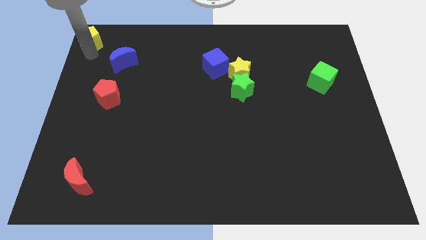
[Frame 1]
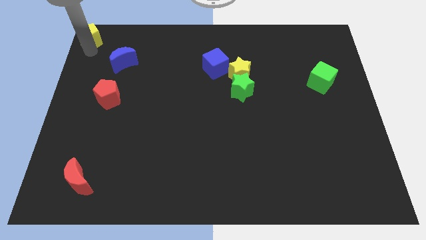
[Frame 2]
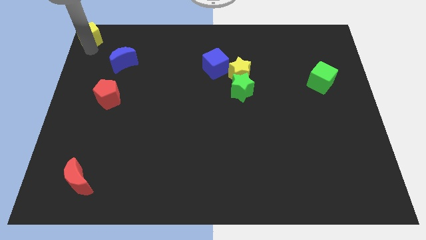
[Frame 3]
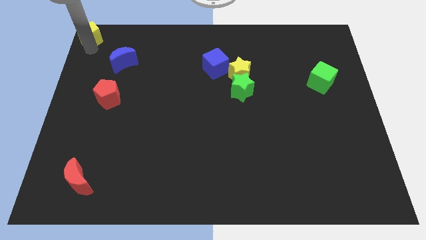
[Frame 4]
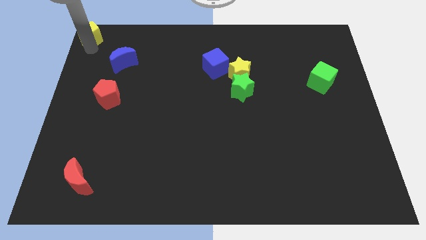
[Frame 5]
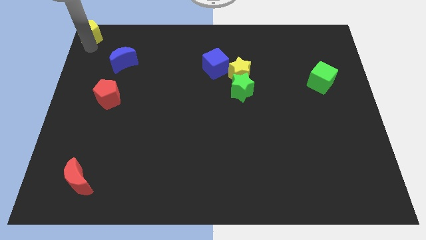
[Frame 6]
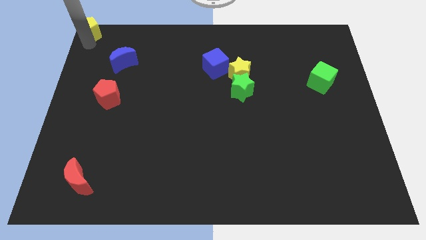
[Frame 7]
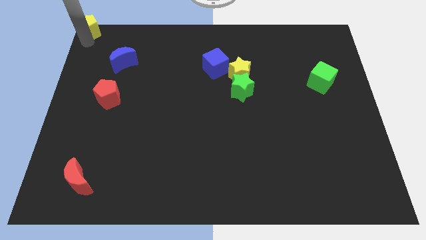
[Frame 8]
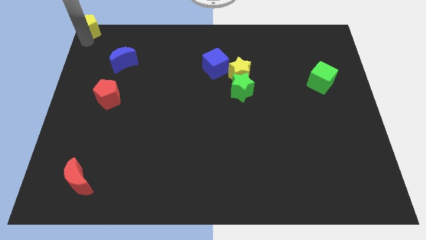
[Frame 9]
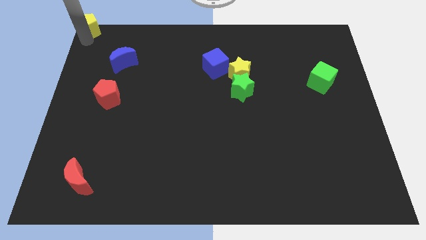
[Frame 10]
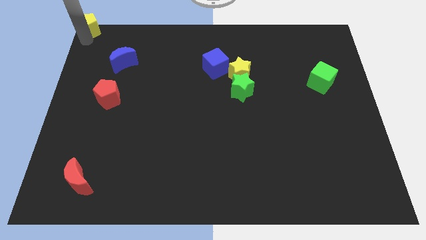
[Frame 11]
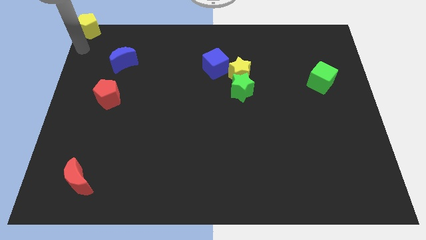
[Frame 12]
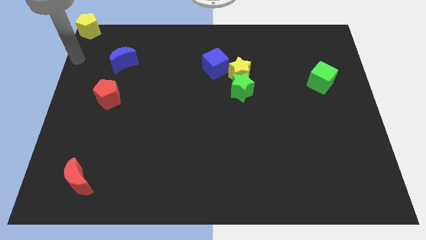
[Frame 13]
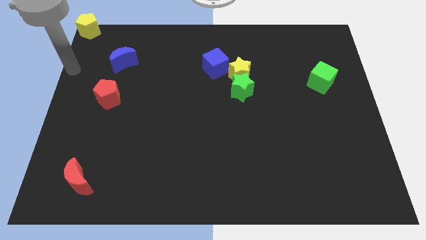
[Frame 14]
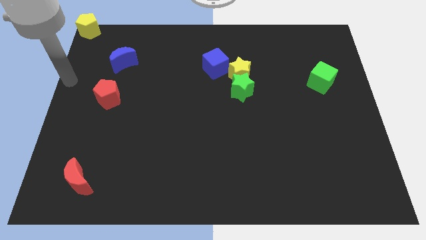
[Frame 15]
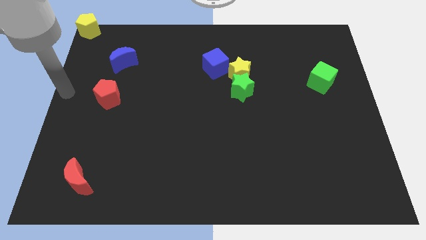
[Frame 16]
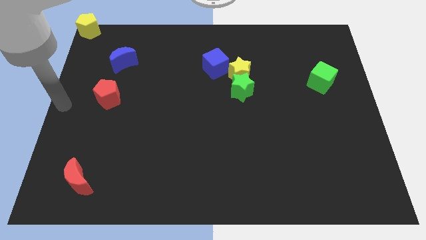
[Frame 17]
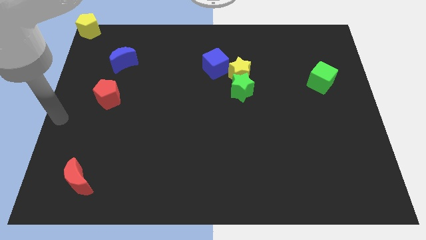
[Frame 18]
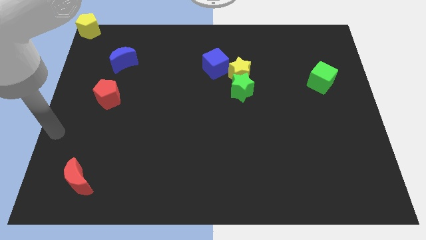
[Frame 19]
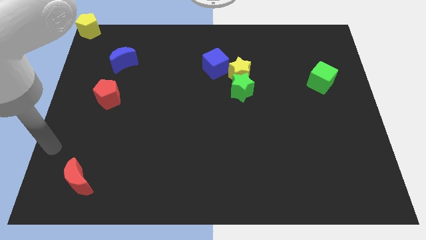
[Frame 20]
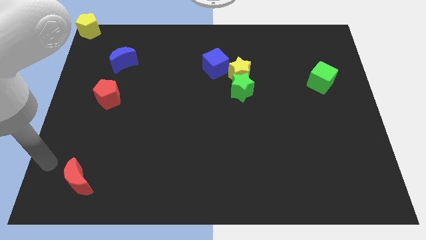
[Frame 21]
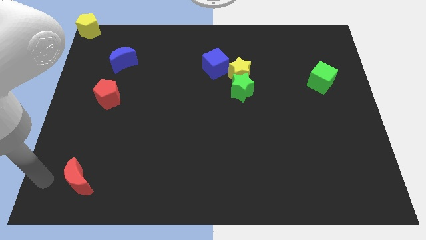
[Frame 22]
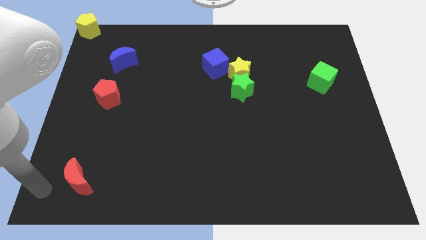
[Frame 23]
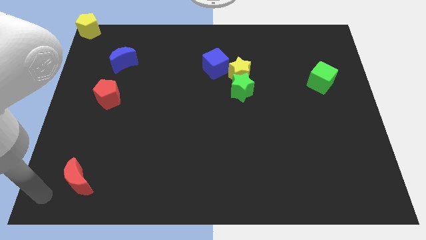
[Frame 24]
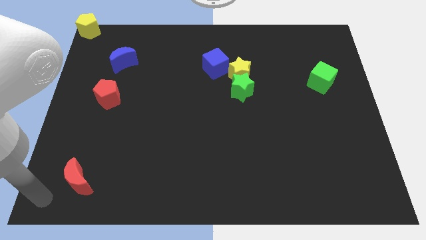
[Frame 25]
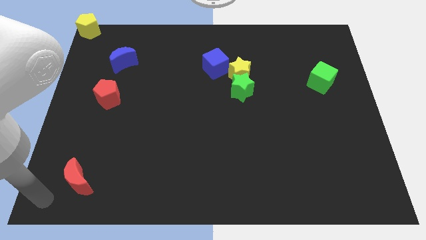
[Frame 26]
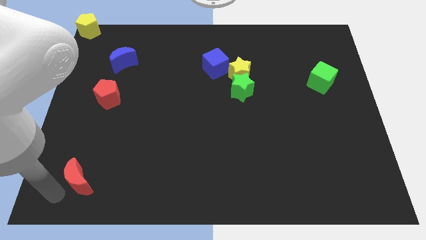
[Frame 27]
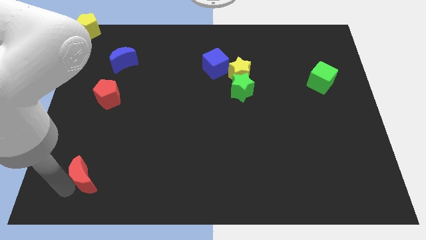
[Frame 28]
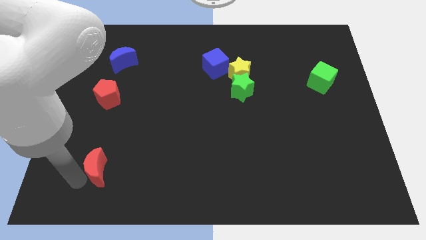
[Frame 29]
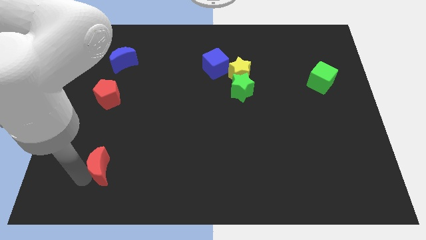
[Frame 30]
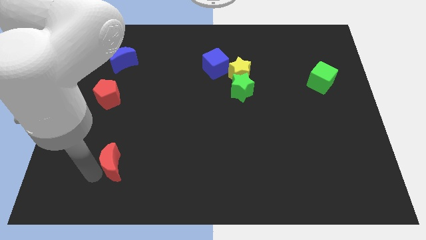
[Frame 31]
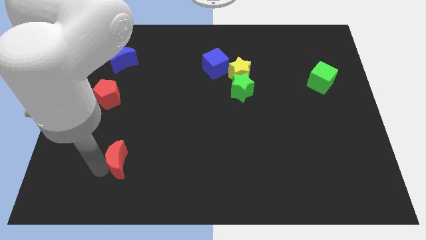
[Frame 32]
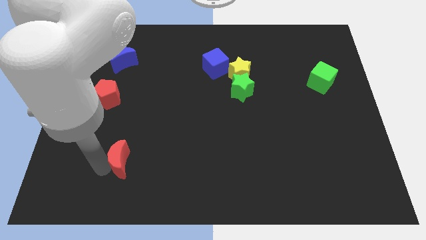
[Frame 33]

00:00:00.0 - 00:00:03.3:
push red crescent below red pentagon

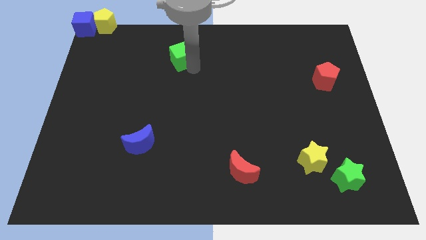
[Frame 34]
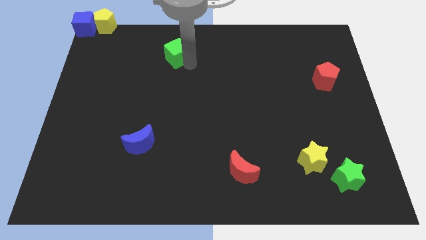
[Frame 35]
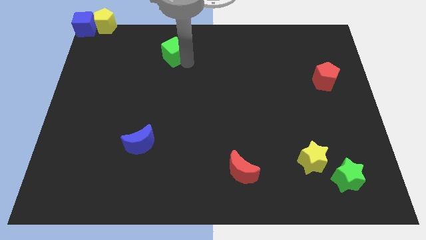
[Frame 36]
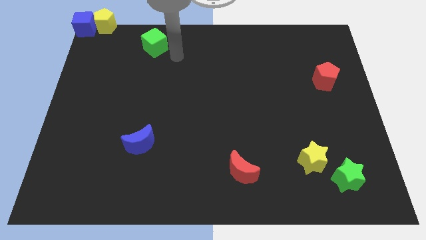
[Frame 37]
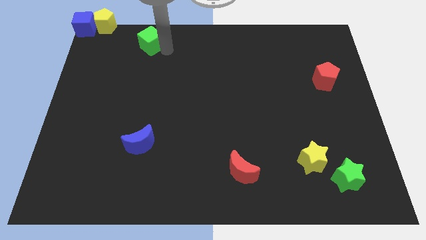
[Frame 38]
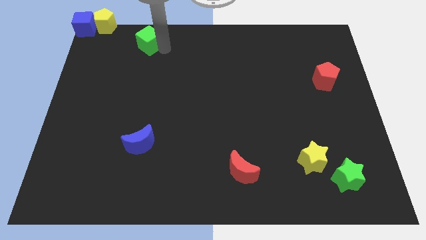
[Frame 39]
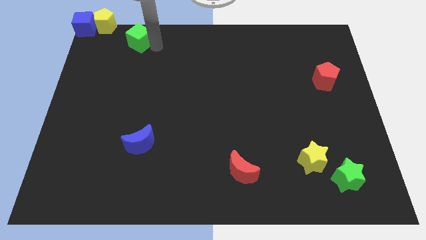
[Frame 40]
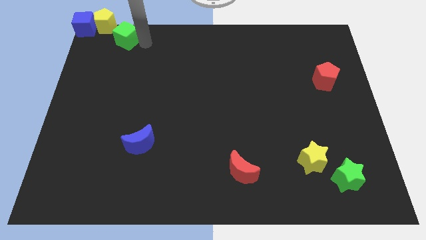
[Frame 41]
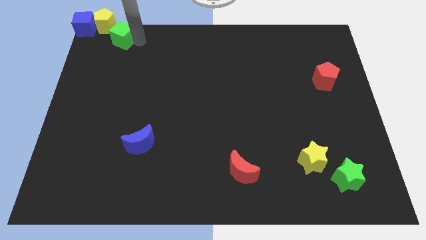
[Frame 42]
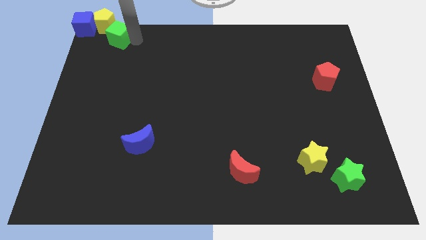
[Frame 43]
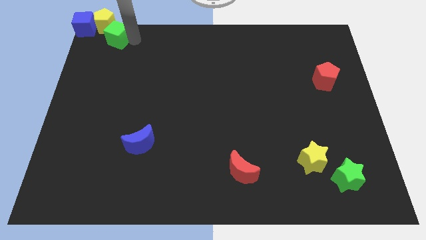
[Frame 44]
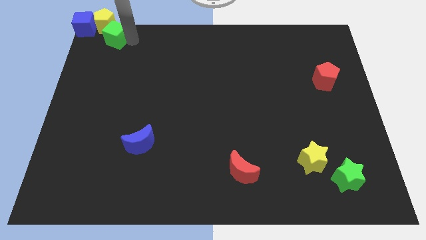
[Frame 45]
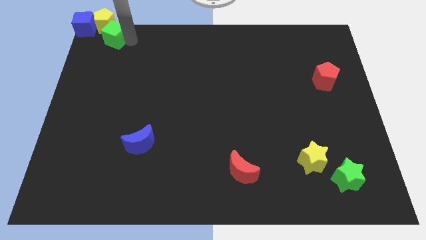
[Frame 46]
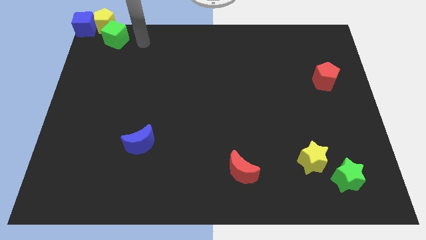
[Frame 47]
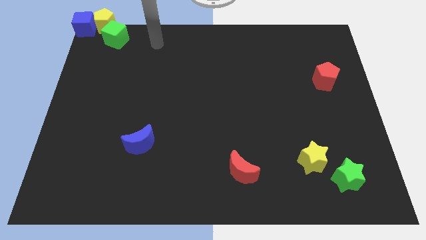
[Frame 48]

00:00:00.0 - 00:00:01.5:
put the green cube at the bottom right side of the yellow pentagon

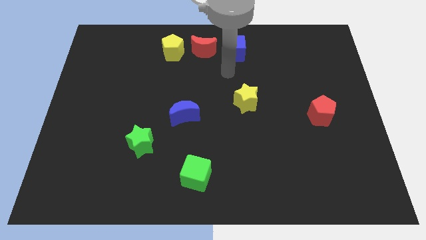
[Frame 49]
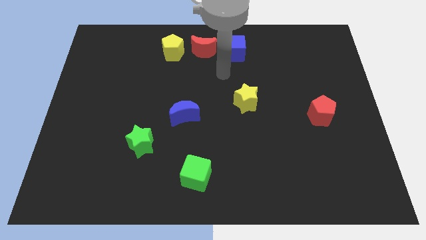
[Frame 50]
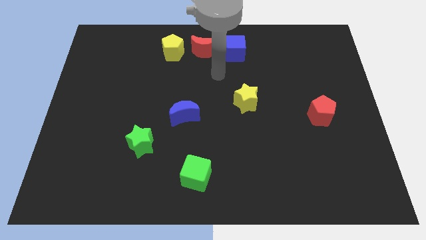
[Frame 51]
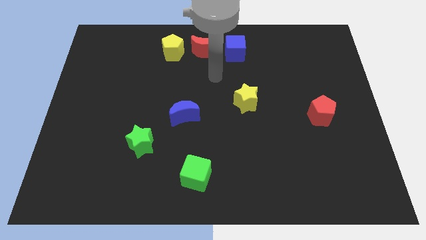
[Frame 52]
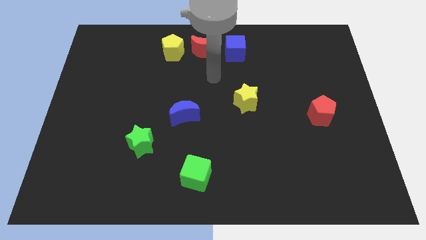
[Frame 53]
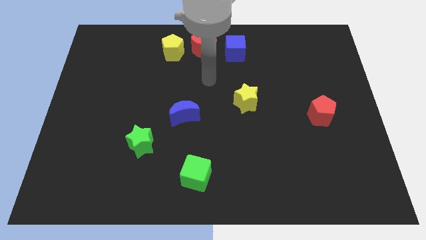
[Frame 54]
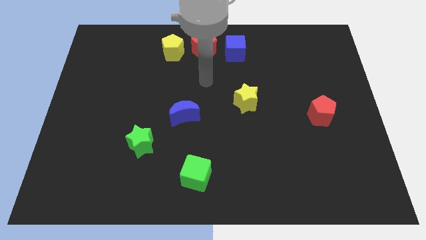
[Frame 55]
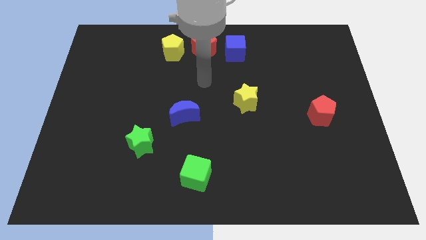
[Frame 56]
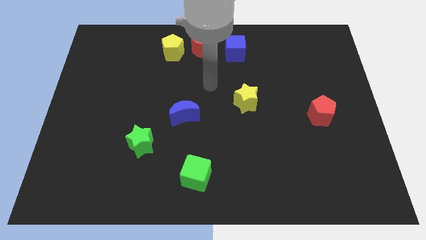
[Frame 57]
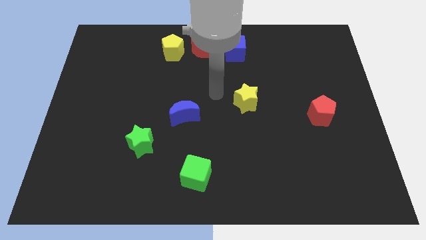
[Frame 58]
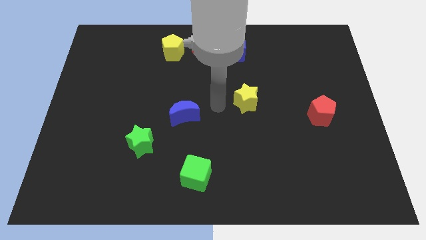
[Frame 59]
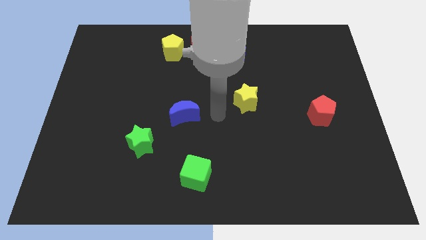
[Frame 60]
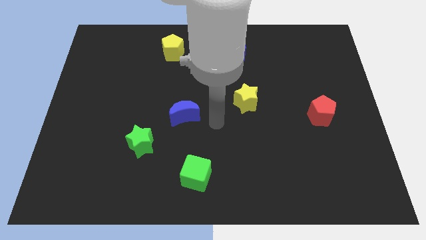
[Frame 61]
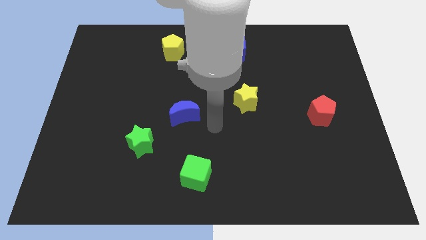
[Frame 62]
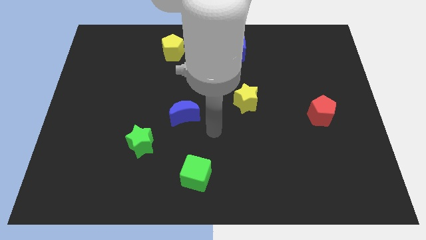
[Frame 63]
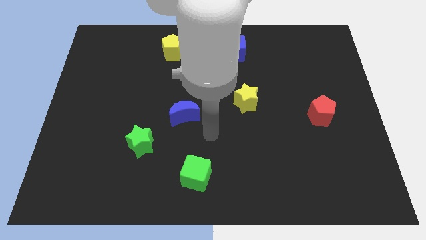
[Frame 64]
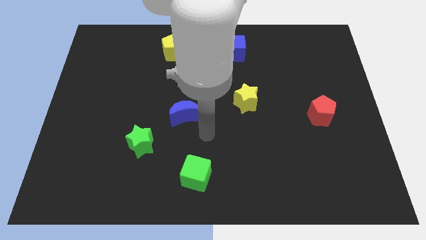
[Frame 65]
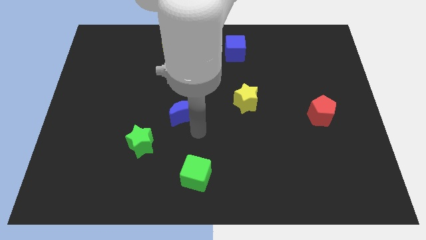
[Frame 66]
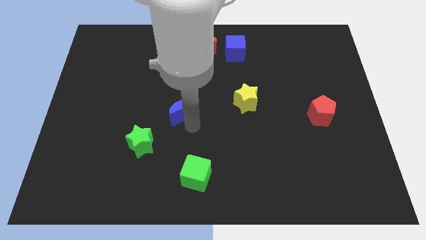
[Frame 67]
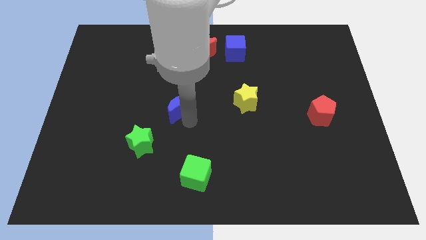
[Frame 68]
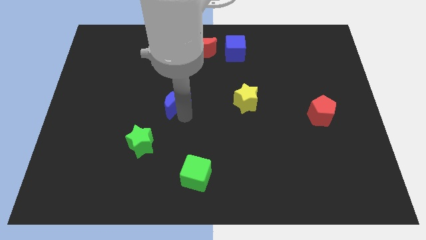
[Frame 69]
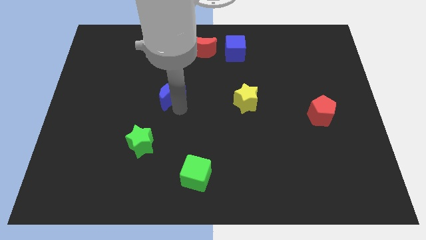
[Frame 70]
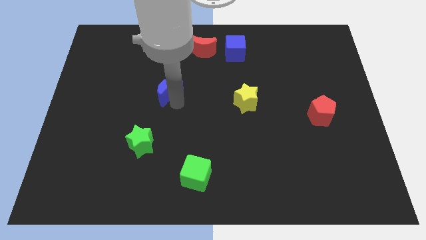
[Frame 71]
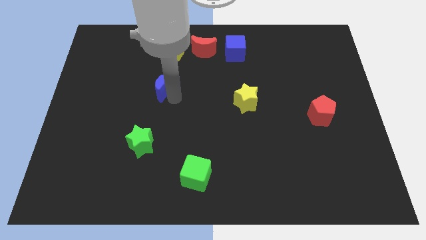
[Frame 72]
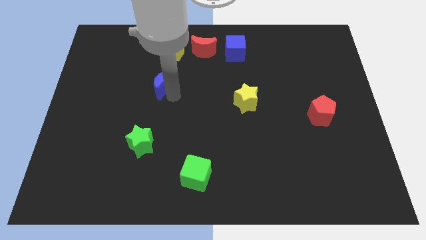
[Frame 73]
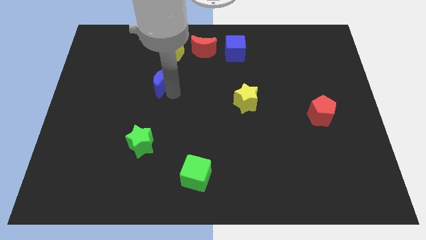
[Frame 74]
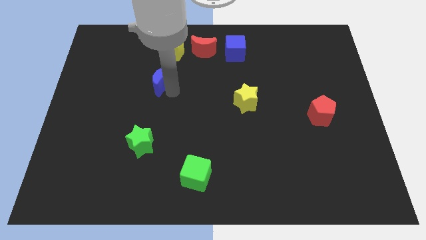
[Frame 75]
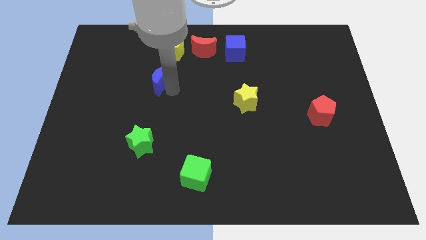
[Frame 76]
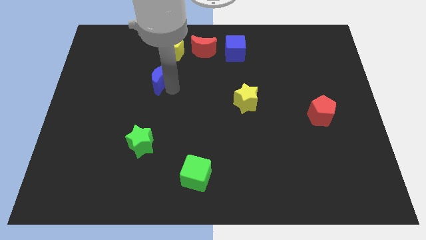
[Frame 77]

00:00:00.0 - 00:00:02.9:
move the blue crescent to the bottom of the yellow pentagon

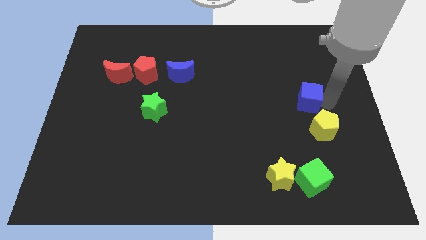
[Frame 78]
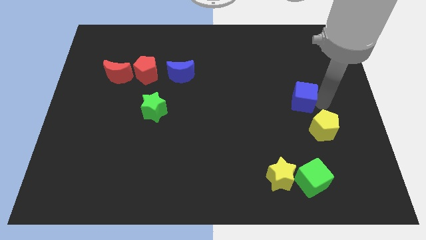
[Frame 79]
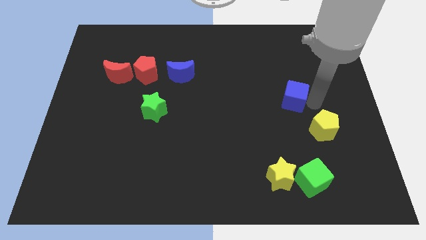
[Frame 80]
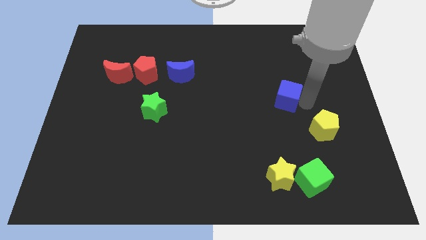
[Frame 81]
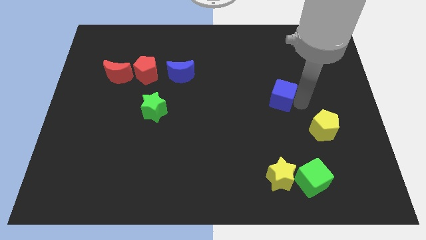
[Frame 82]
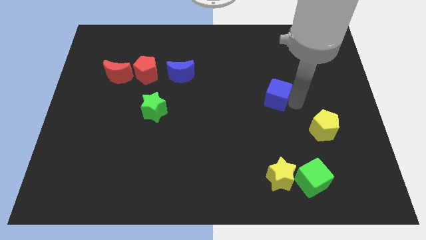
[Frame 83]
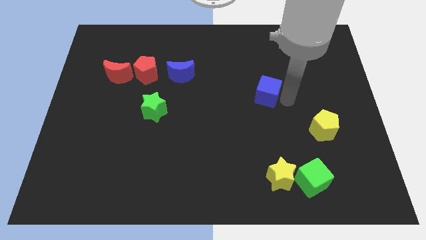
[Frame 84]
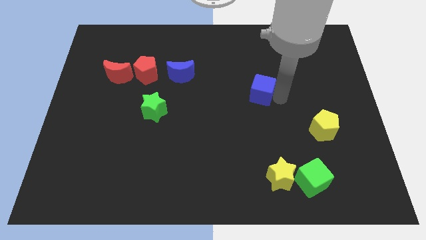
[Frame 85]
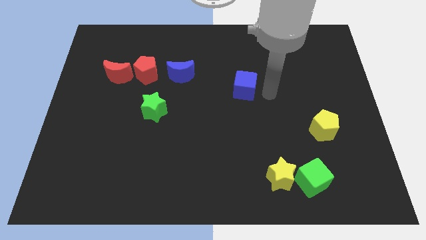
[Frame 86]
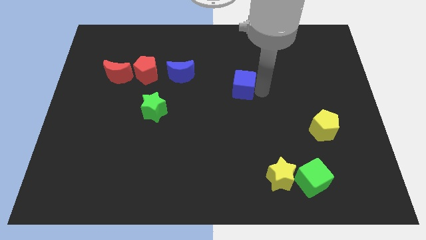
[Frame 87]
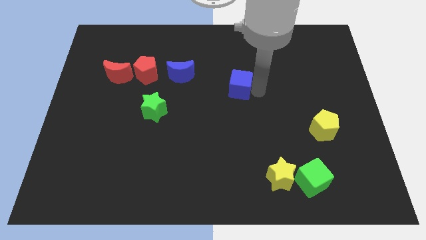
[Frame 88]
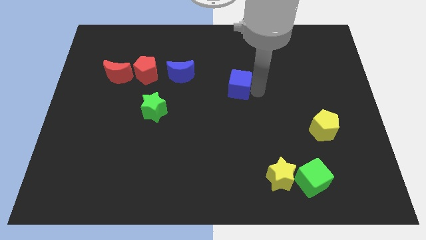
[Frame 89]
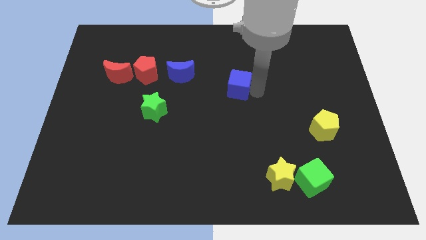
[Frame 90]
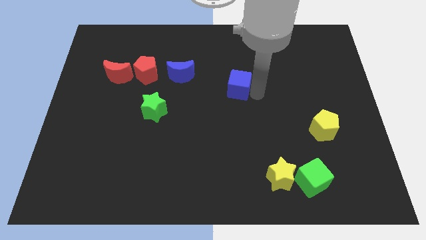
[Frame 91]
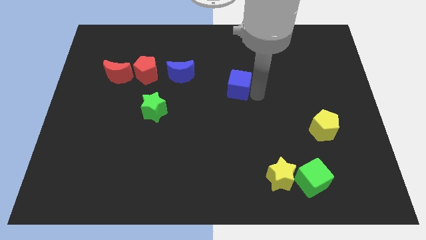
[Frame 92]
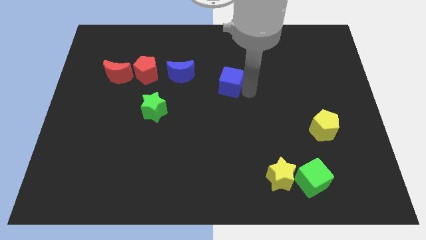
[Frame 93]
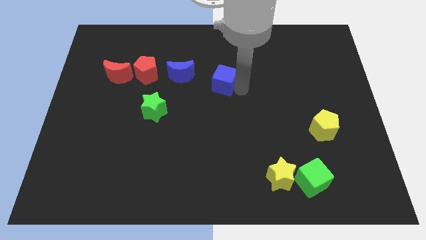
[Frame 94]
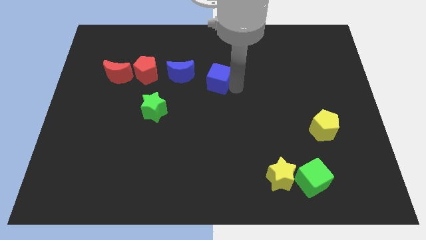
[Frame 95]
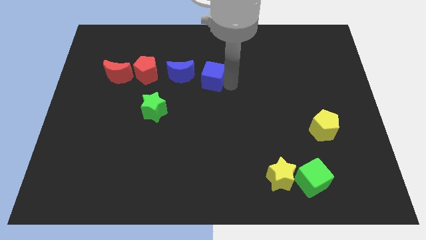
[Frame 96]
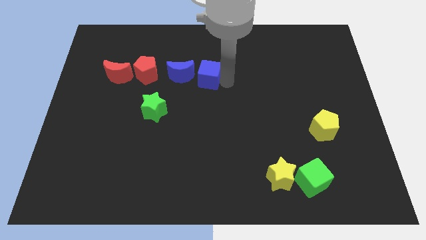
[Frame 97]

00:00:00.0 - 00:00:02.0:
move the blue cube towards the left side
